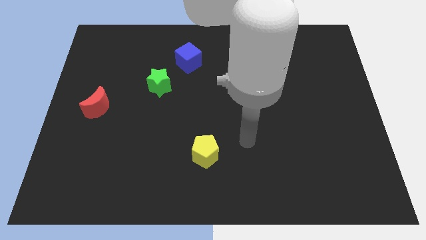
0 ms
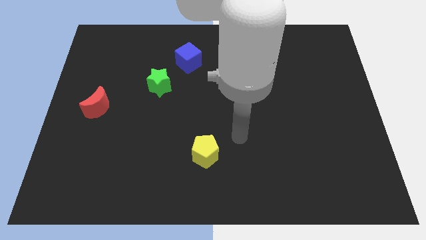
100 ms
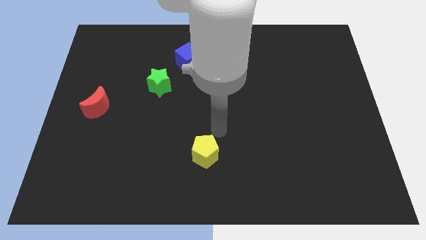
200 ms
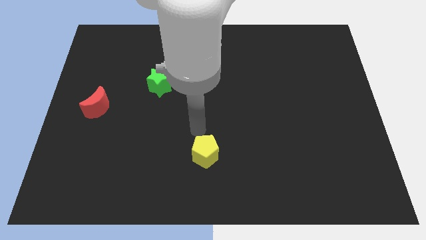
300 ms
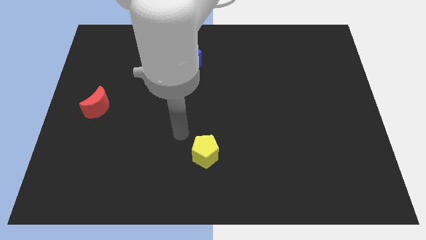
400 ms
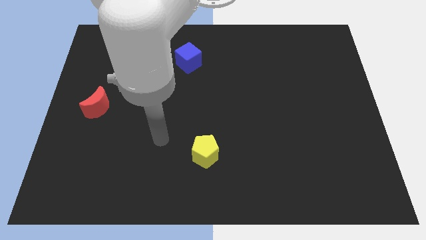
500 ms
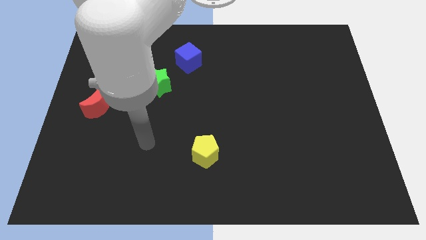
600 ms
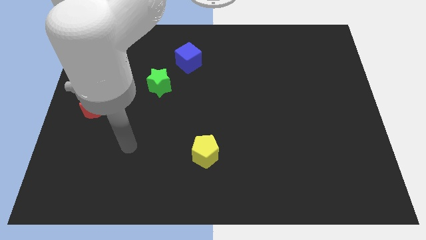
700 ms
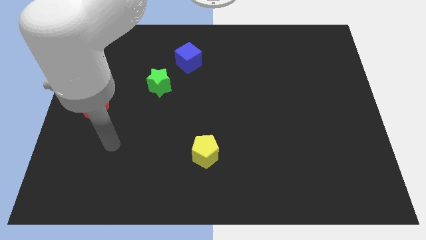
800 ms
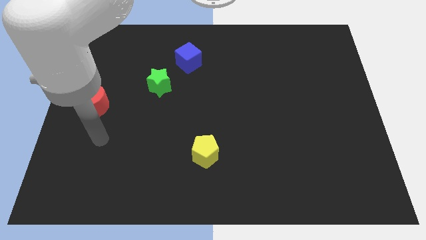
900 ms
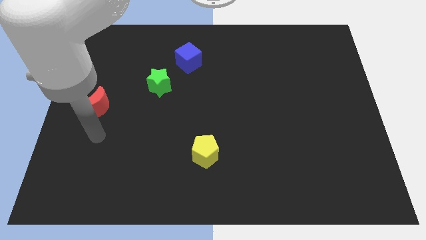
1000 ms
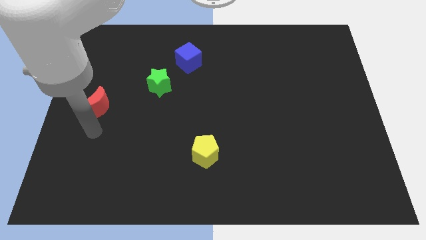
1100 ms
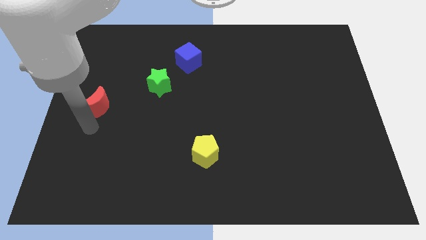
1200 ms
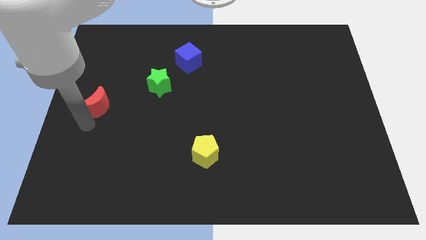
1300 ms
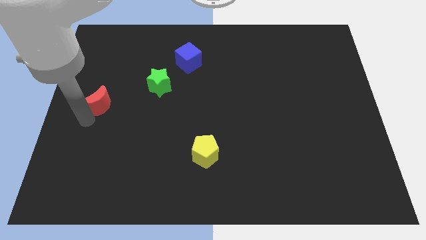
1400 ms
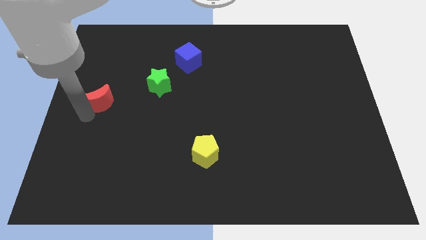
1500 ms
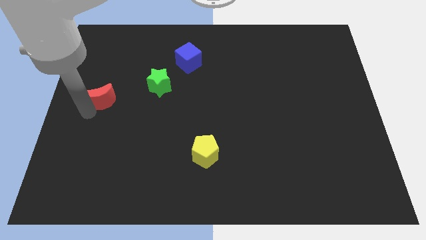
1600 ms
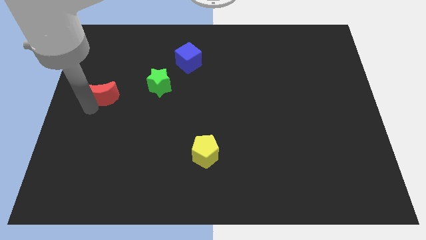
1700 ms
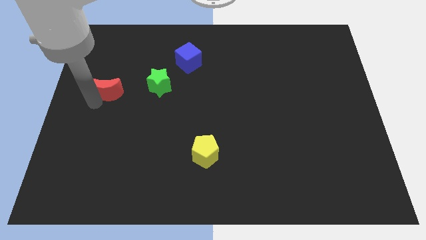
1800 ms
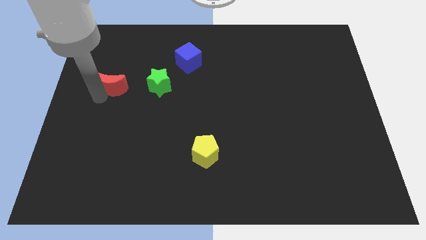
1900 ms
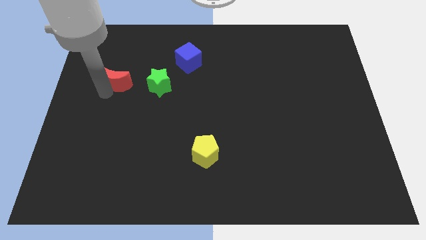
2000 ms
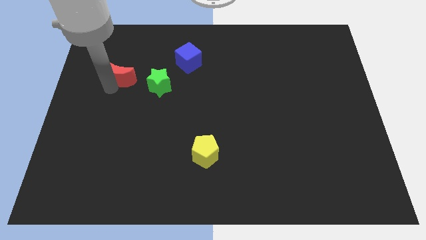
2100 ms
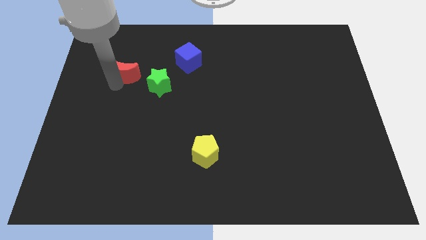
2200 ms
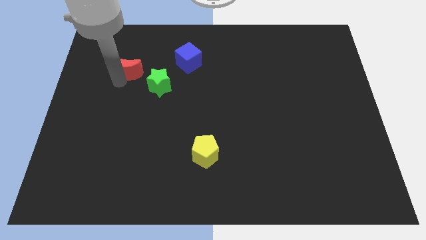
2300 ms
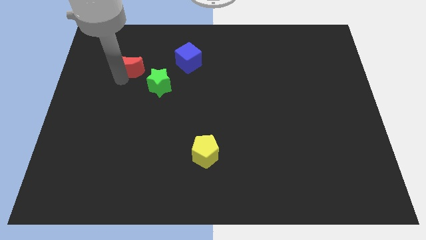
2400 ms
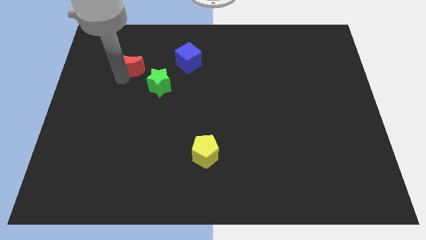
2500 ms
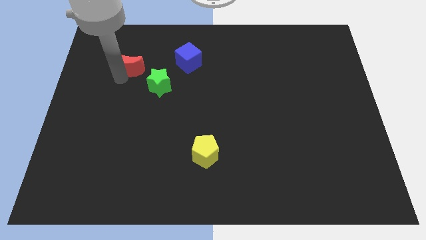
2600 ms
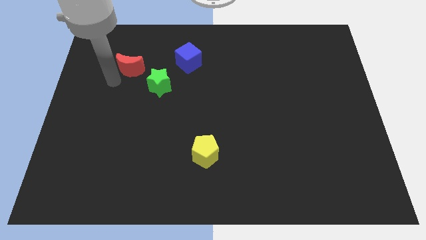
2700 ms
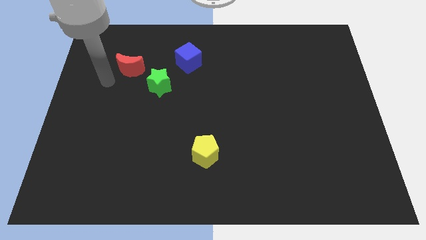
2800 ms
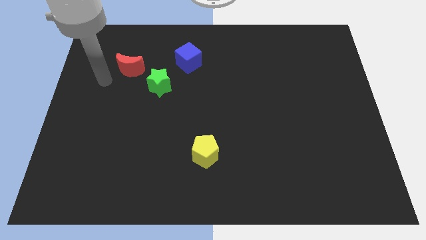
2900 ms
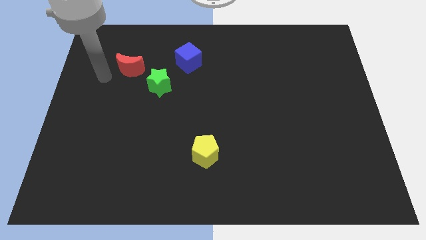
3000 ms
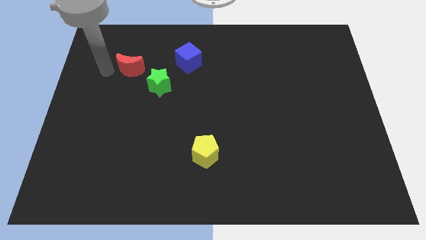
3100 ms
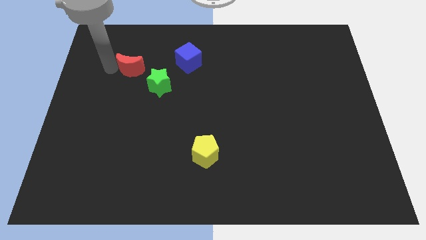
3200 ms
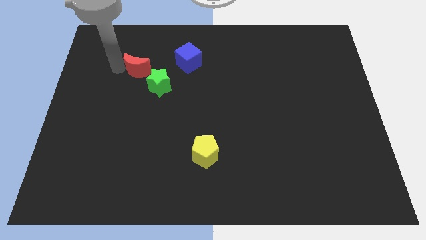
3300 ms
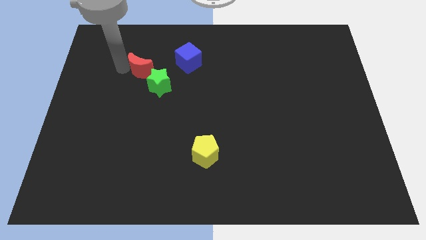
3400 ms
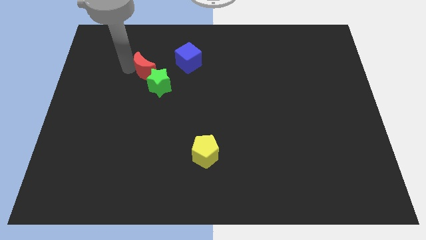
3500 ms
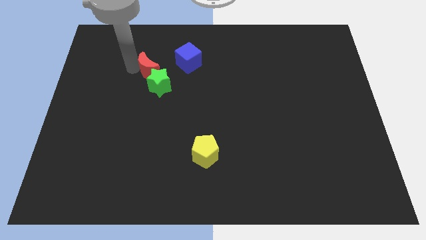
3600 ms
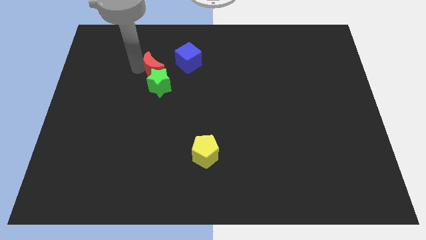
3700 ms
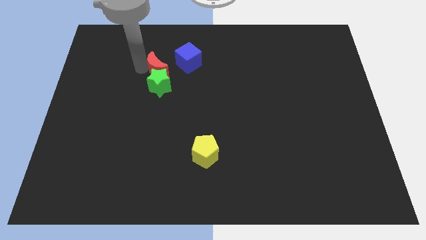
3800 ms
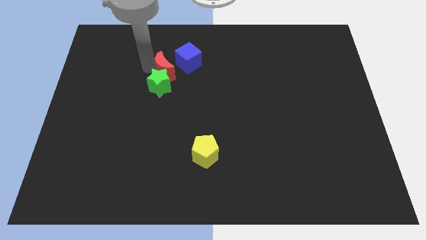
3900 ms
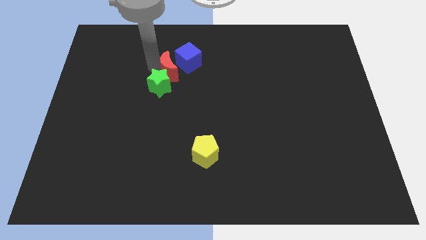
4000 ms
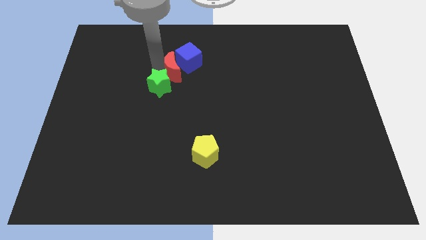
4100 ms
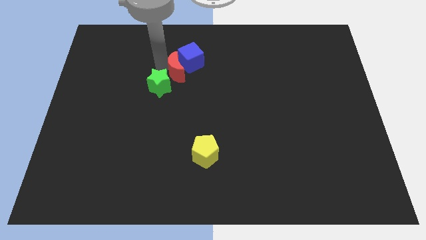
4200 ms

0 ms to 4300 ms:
push the red block next to the blue cube

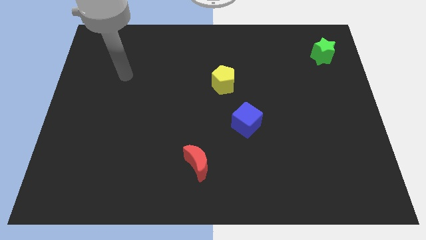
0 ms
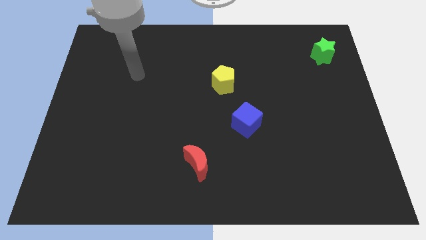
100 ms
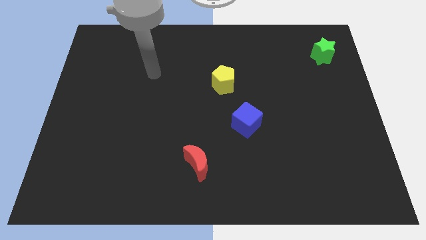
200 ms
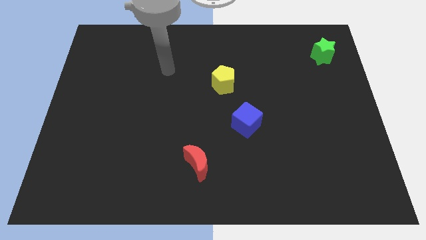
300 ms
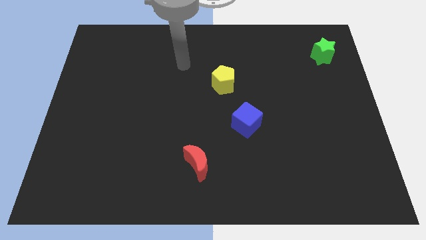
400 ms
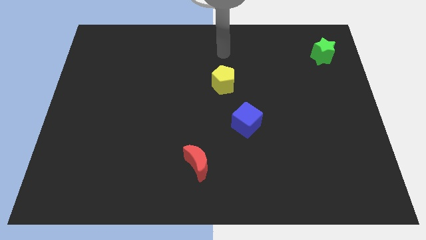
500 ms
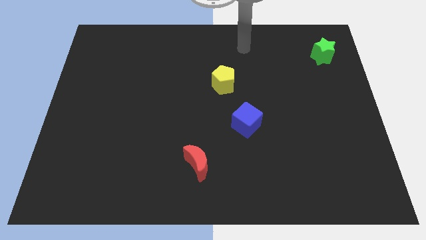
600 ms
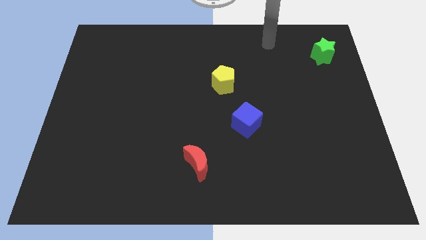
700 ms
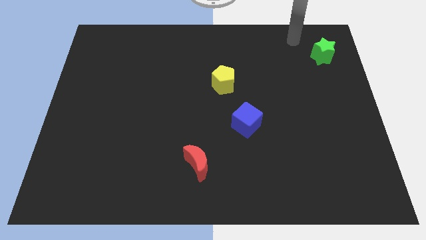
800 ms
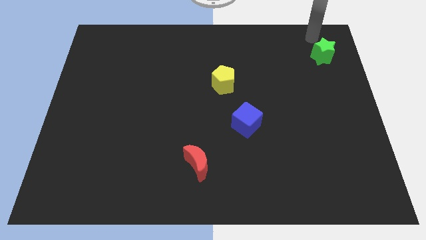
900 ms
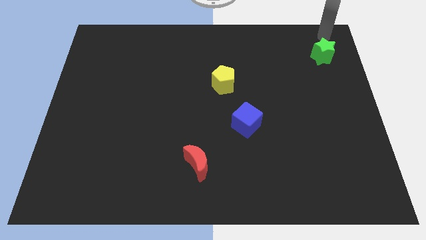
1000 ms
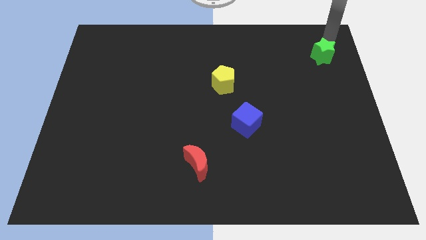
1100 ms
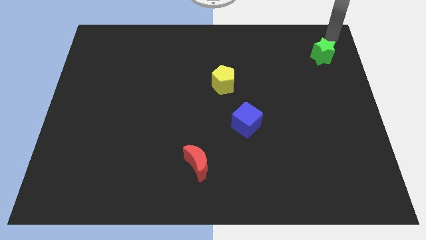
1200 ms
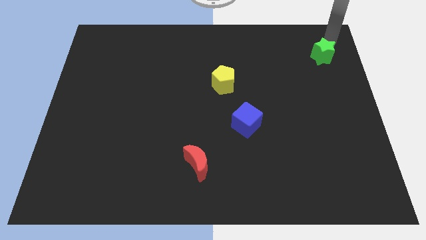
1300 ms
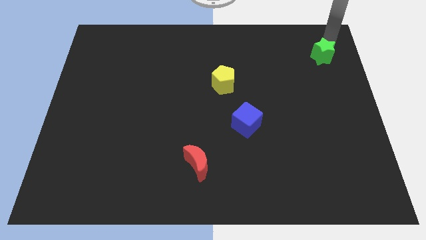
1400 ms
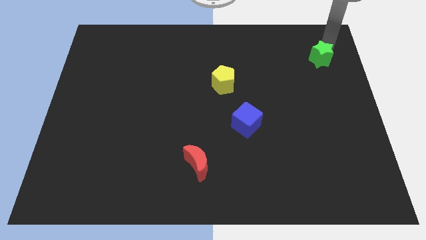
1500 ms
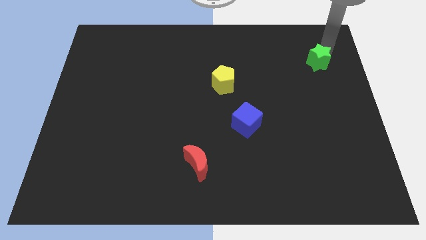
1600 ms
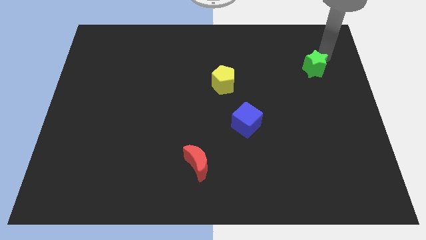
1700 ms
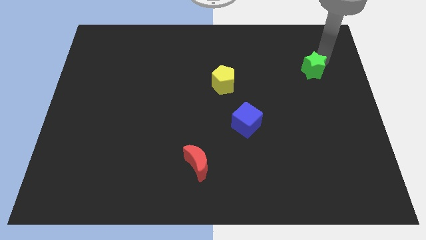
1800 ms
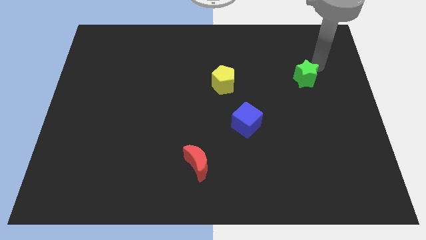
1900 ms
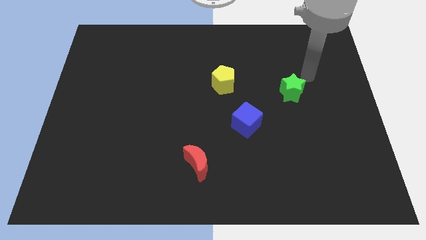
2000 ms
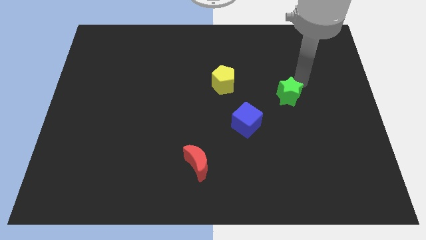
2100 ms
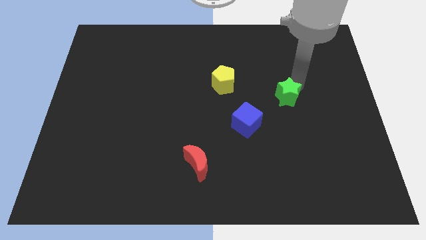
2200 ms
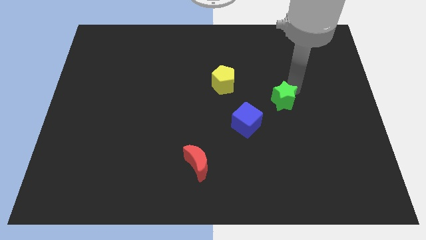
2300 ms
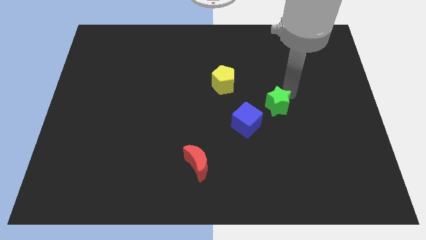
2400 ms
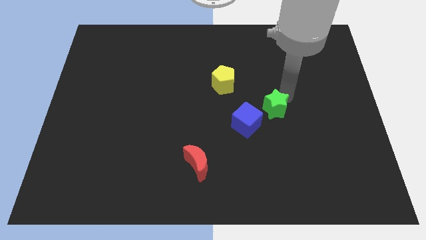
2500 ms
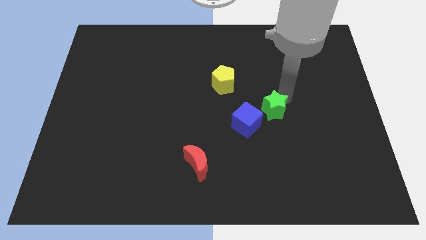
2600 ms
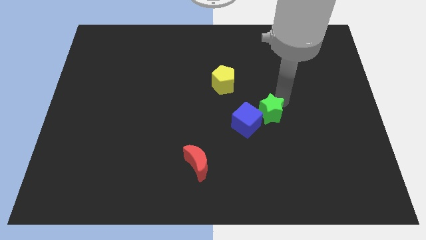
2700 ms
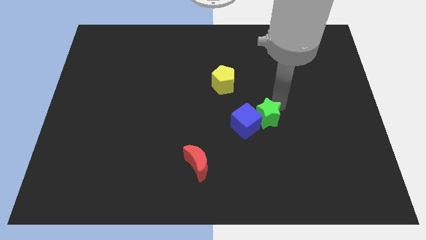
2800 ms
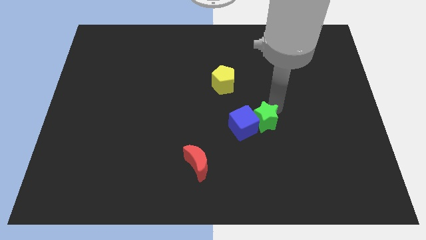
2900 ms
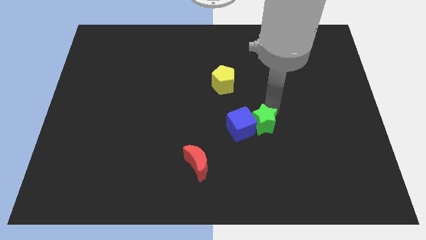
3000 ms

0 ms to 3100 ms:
move the green star next to the blue block

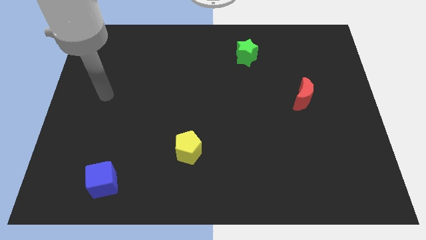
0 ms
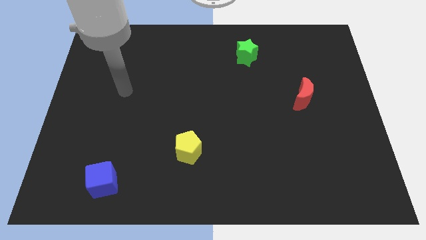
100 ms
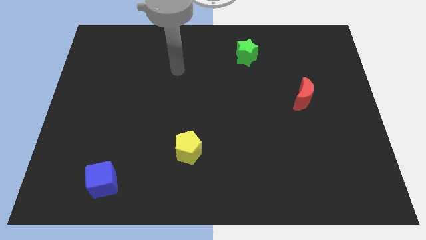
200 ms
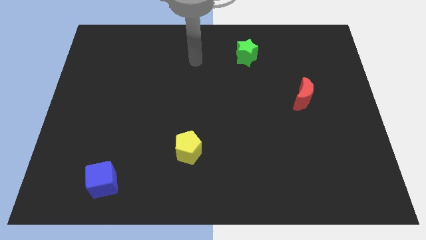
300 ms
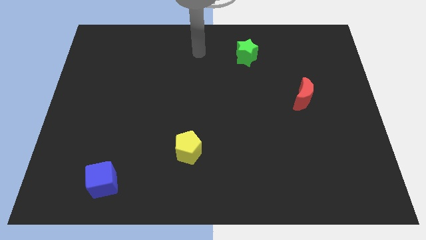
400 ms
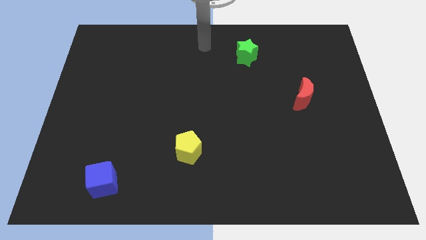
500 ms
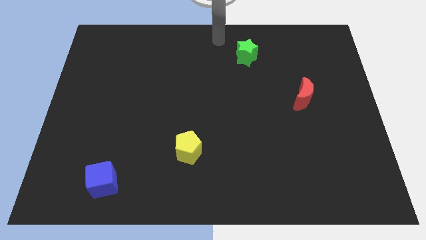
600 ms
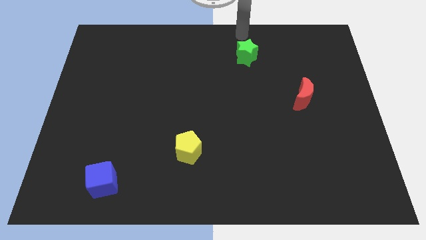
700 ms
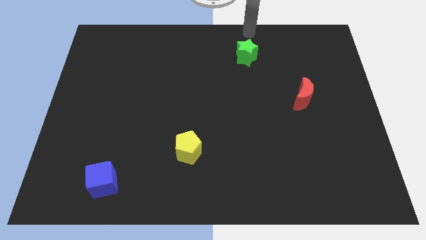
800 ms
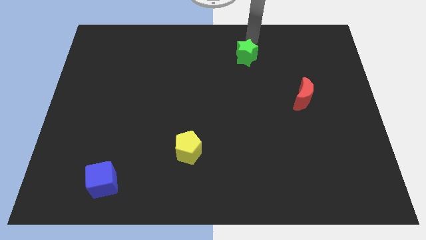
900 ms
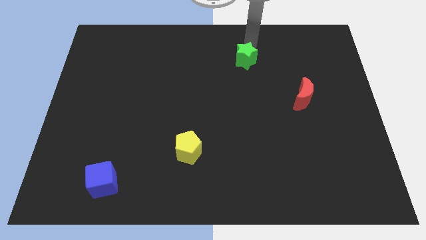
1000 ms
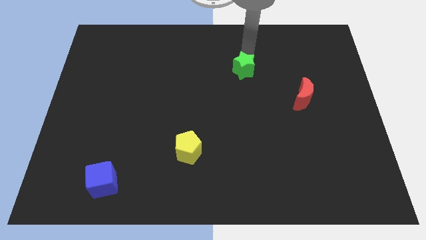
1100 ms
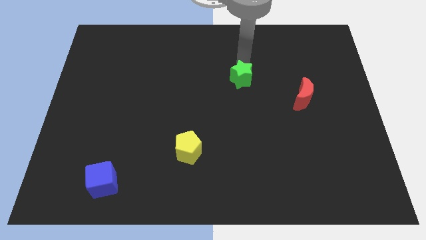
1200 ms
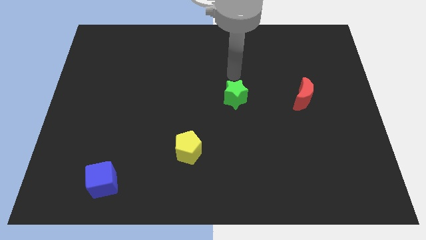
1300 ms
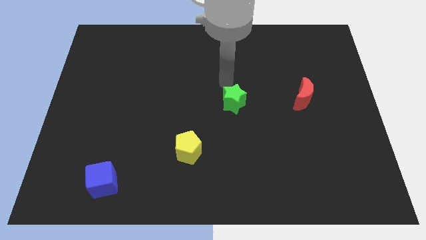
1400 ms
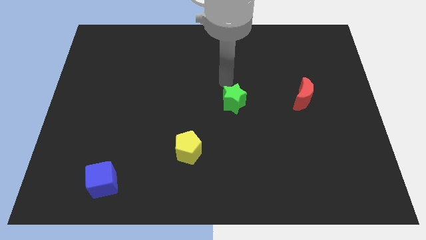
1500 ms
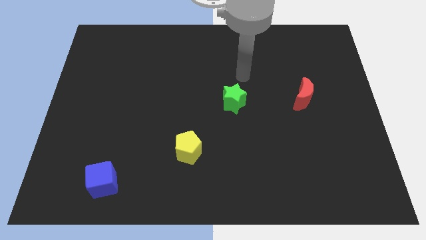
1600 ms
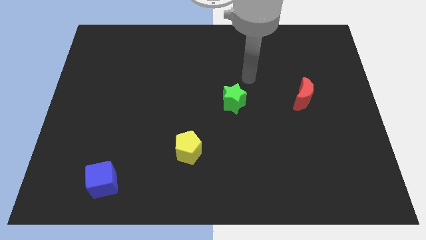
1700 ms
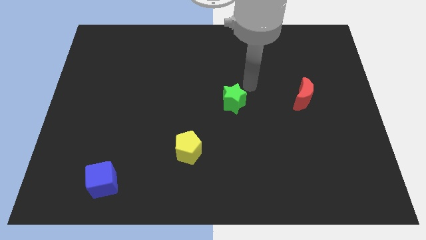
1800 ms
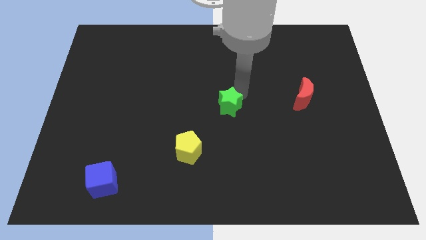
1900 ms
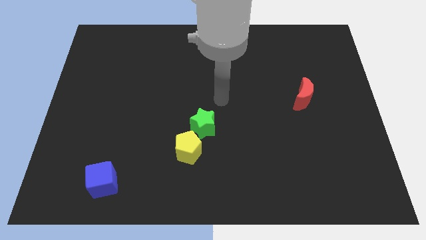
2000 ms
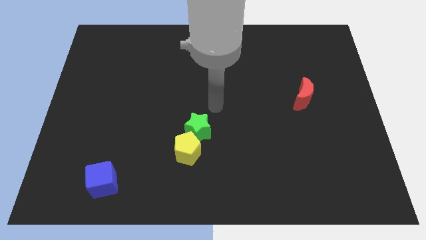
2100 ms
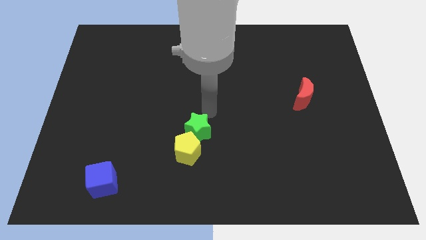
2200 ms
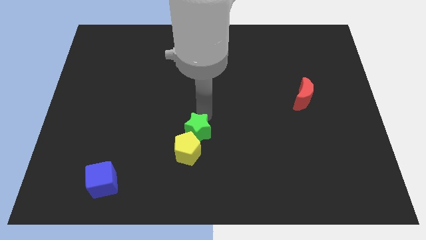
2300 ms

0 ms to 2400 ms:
slide the green star to the yellow pentagon
